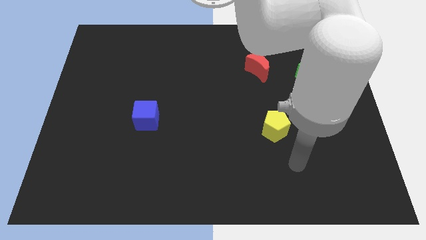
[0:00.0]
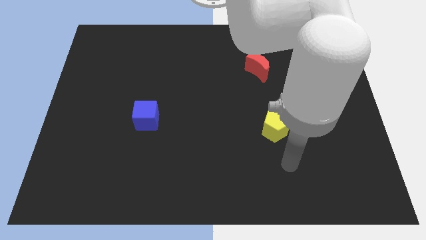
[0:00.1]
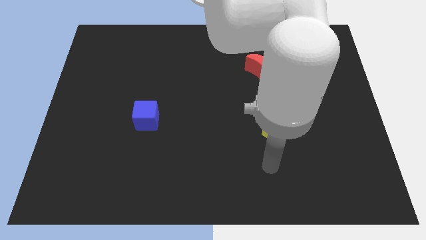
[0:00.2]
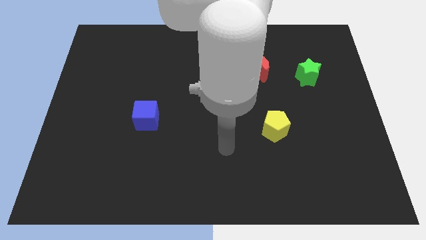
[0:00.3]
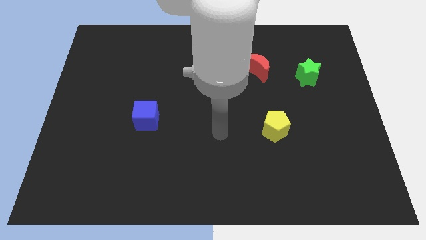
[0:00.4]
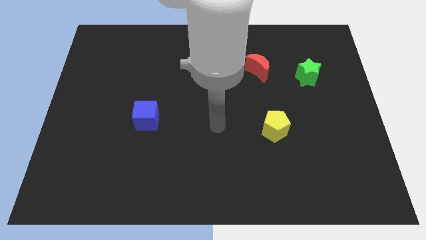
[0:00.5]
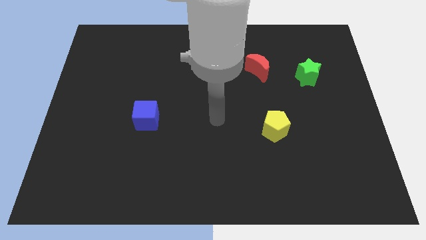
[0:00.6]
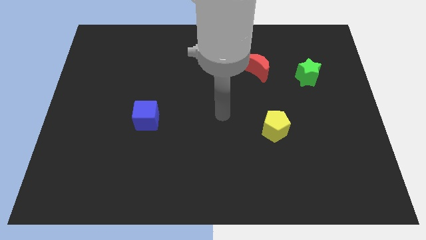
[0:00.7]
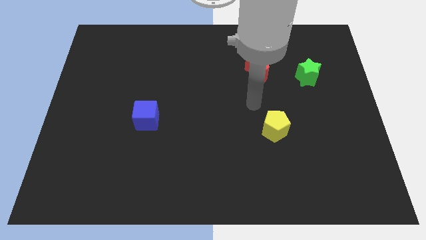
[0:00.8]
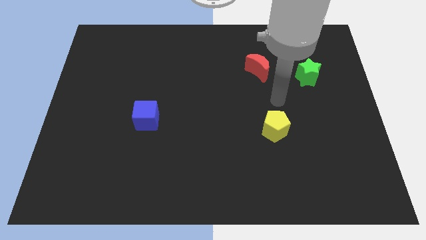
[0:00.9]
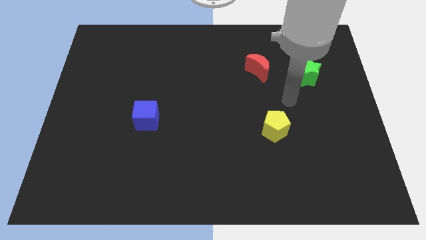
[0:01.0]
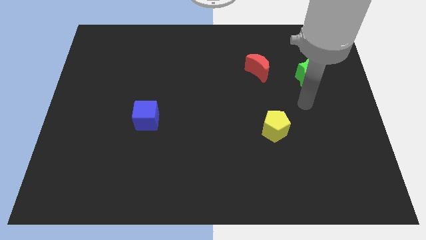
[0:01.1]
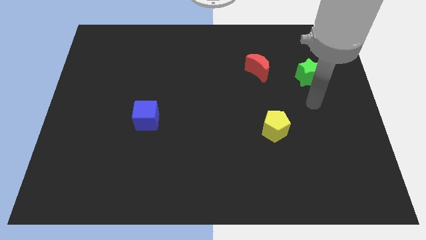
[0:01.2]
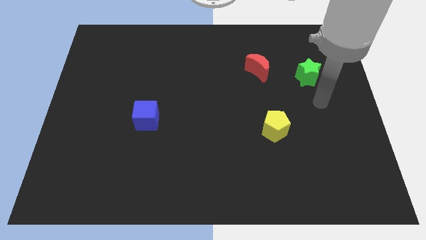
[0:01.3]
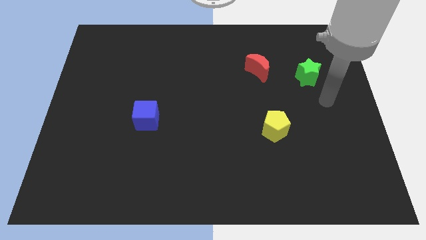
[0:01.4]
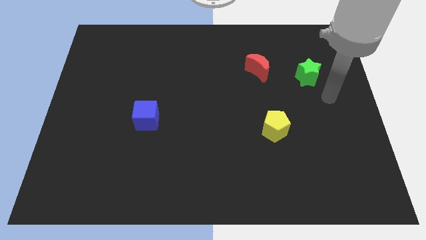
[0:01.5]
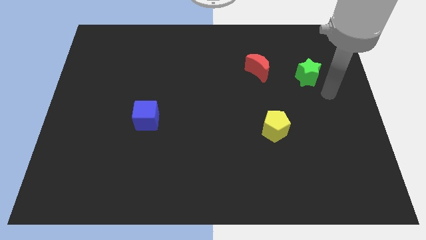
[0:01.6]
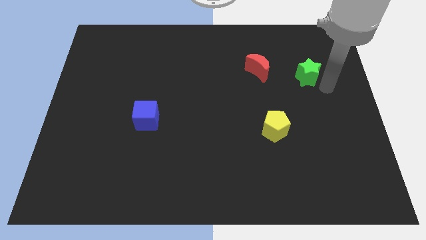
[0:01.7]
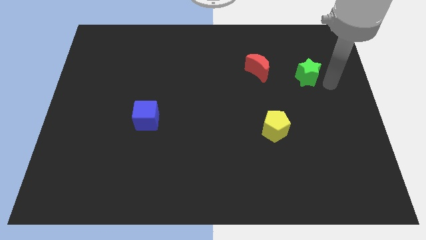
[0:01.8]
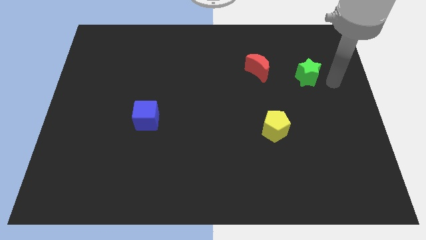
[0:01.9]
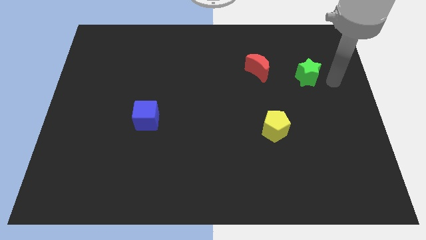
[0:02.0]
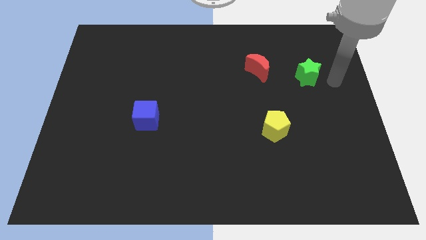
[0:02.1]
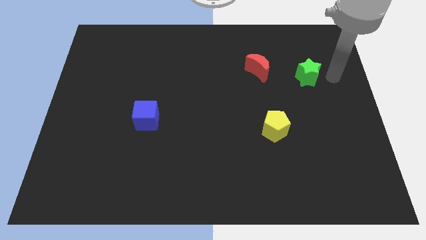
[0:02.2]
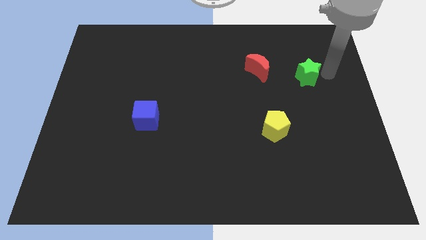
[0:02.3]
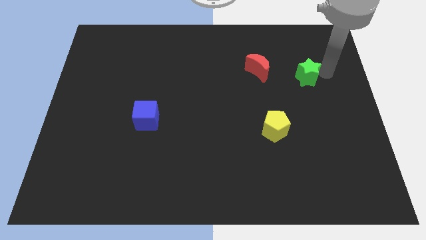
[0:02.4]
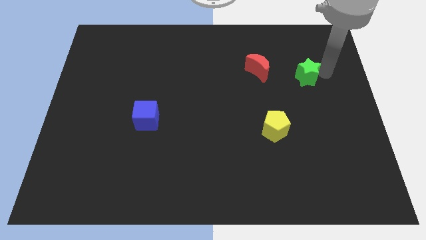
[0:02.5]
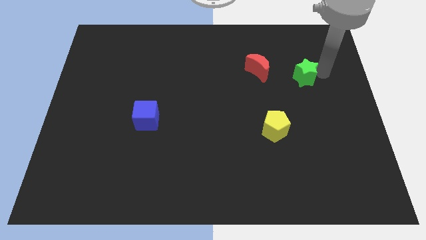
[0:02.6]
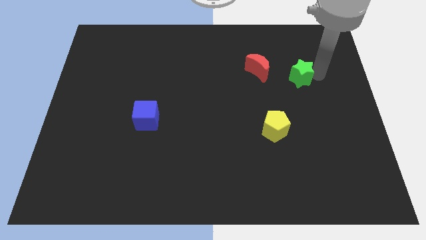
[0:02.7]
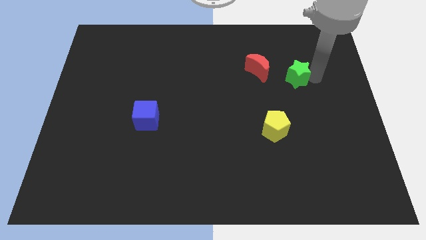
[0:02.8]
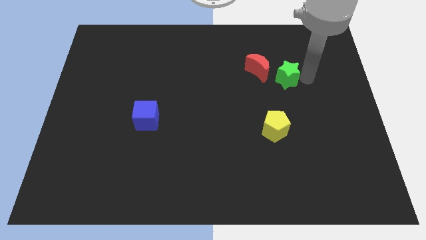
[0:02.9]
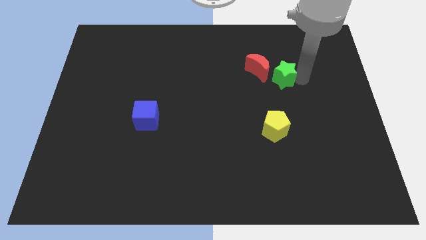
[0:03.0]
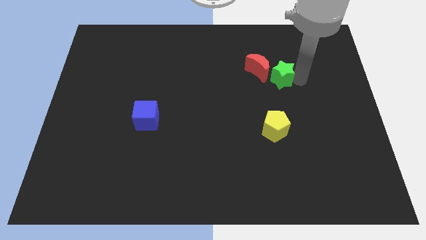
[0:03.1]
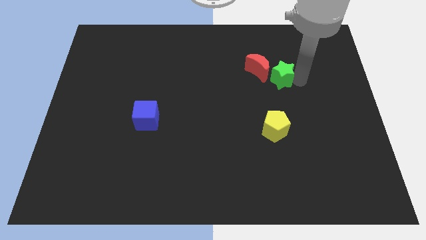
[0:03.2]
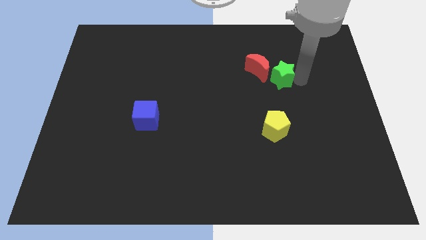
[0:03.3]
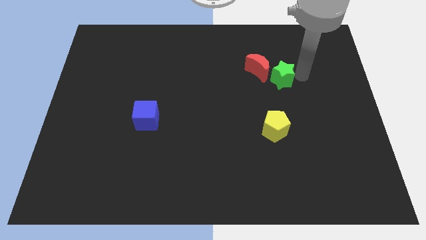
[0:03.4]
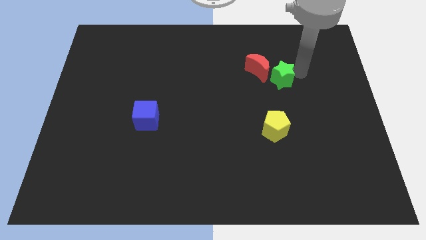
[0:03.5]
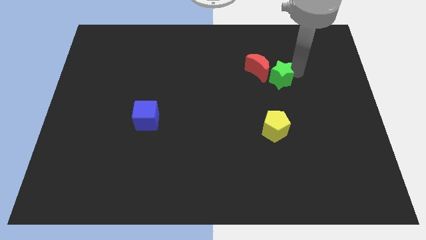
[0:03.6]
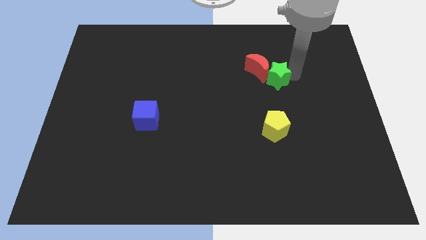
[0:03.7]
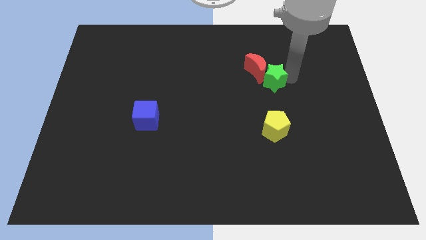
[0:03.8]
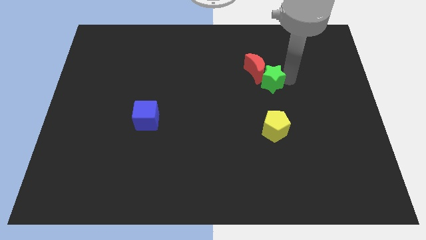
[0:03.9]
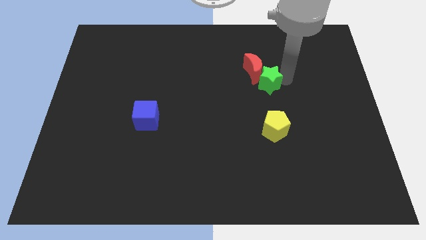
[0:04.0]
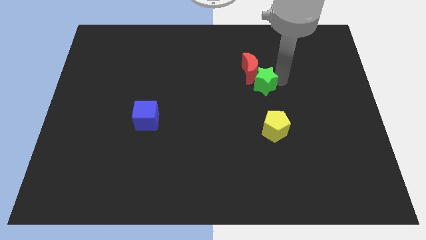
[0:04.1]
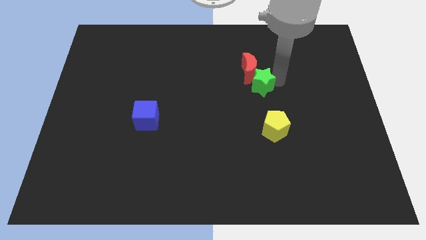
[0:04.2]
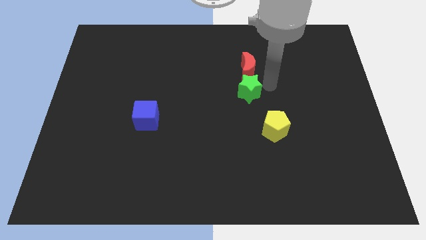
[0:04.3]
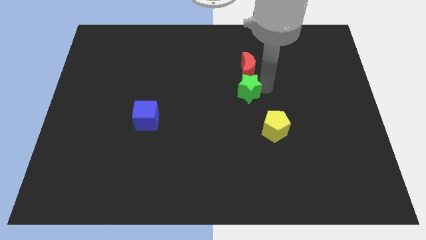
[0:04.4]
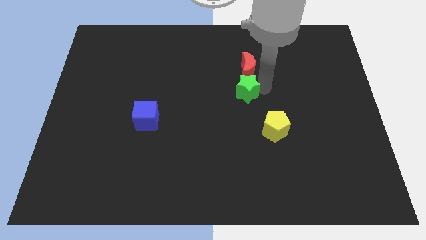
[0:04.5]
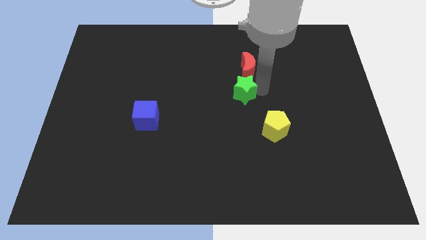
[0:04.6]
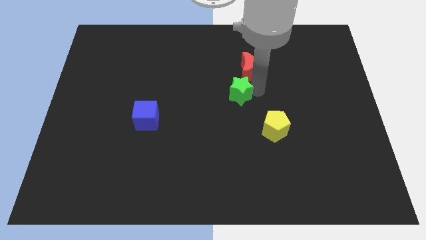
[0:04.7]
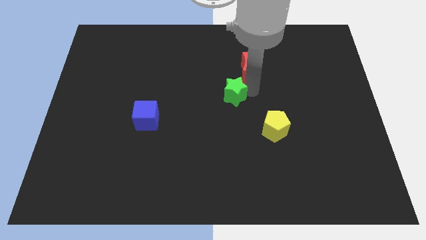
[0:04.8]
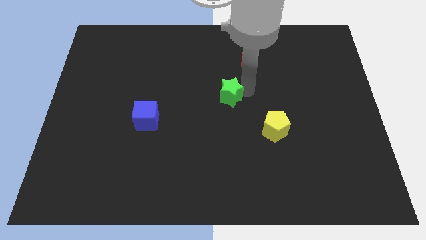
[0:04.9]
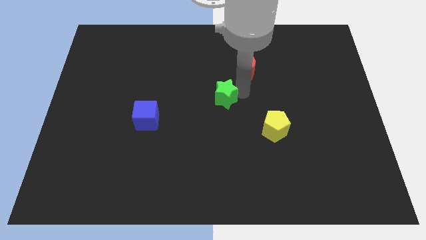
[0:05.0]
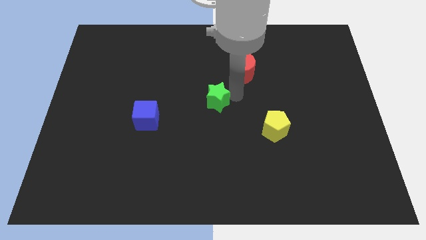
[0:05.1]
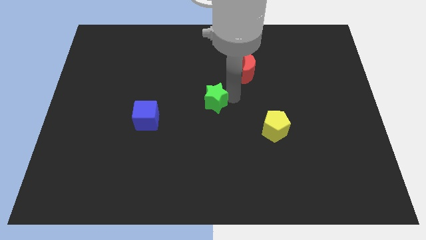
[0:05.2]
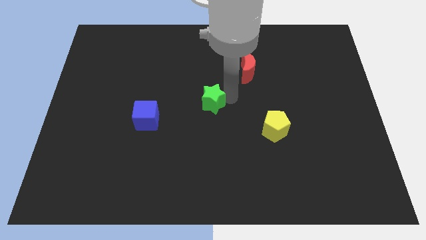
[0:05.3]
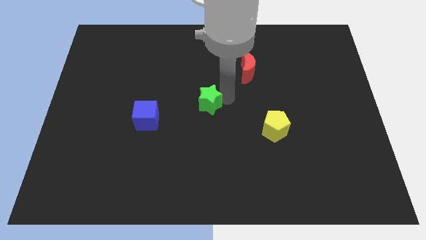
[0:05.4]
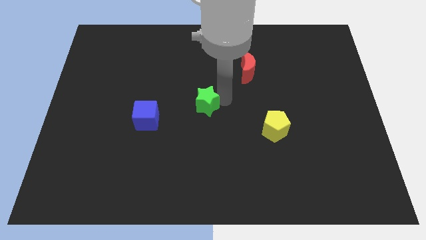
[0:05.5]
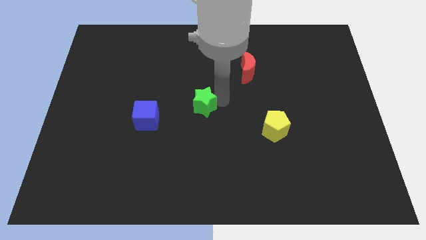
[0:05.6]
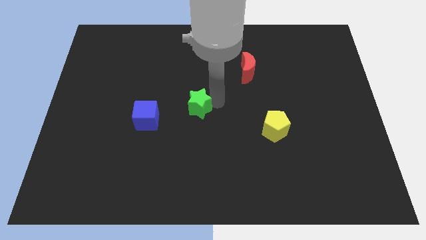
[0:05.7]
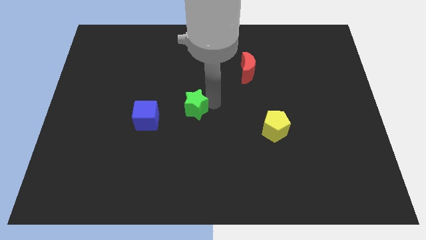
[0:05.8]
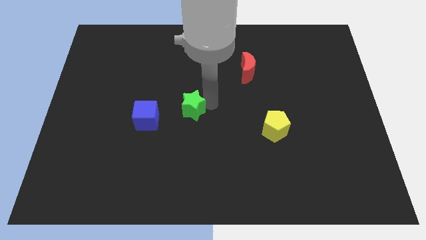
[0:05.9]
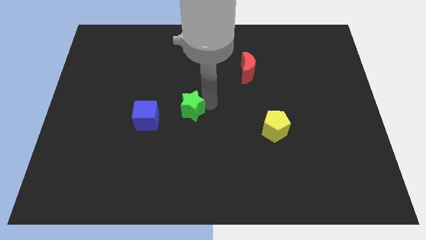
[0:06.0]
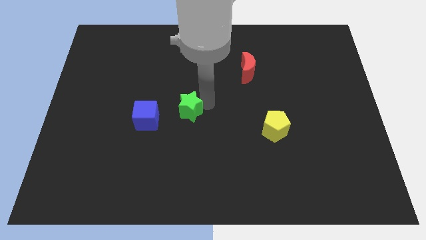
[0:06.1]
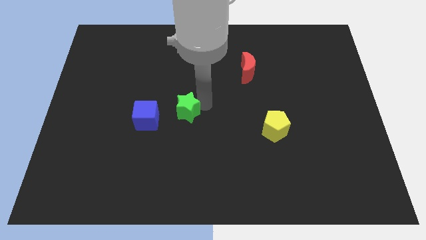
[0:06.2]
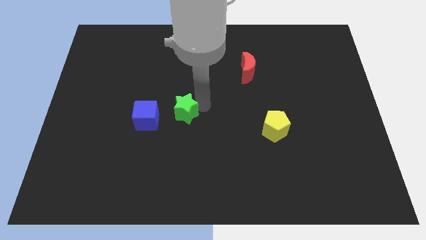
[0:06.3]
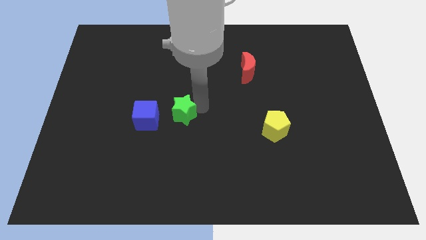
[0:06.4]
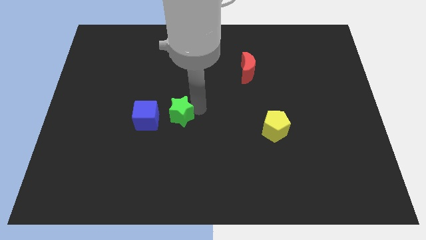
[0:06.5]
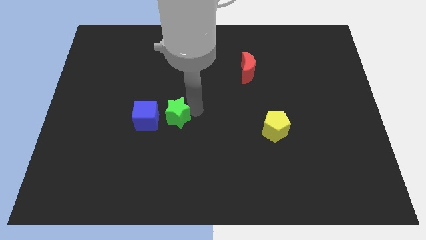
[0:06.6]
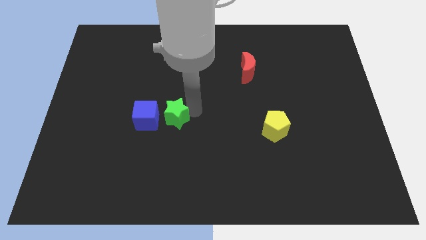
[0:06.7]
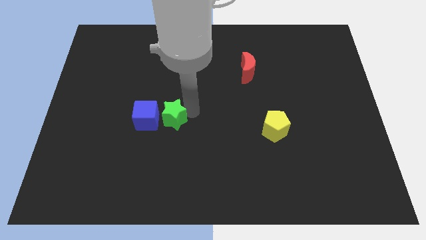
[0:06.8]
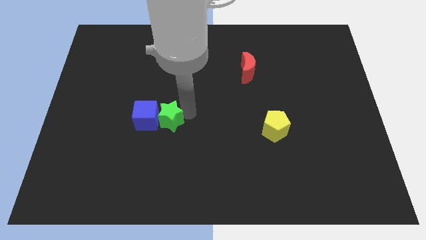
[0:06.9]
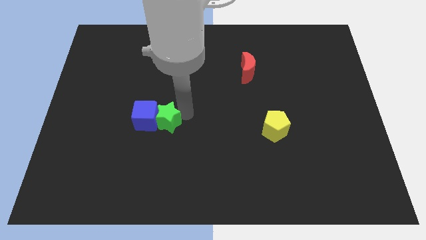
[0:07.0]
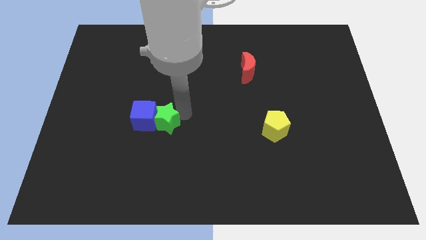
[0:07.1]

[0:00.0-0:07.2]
move the star next to the blue cube

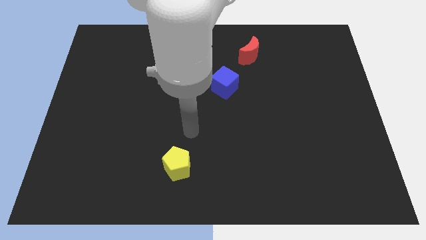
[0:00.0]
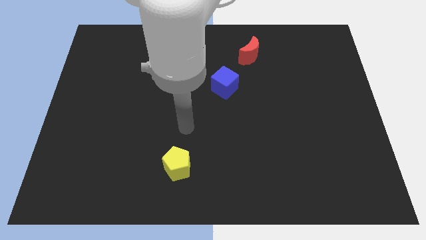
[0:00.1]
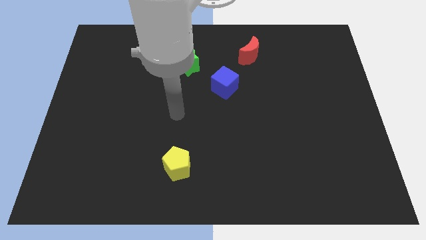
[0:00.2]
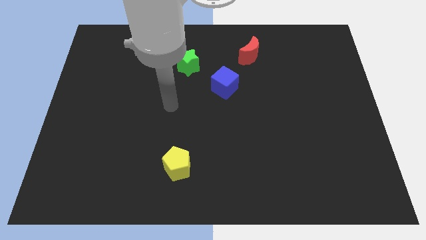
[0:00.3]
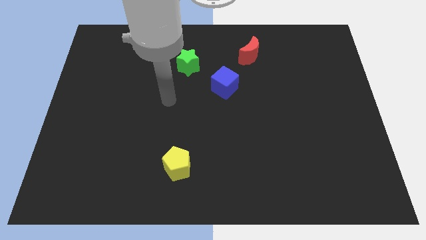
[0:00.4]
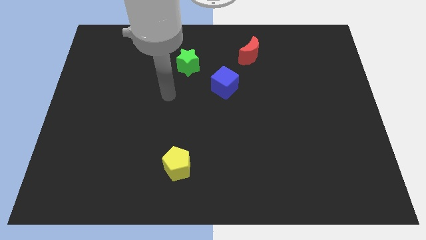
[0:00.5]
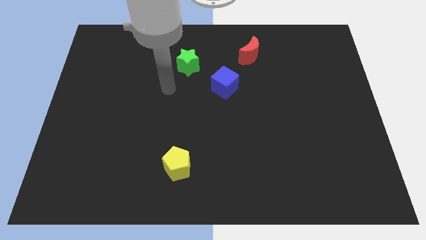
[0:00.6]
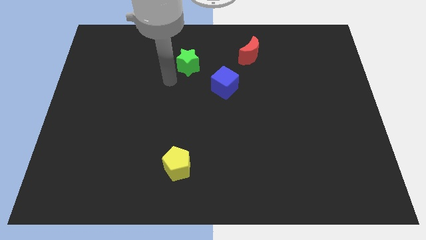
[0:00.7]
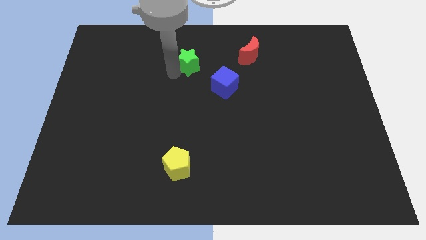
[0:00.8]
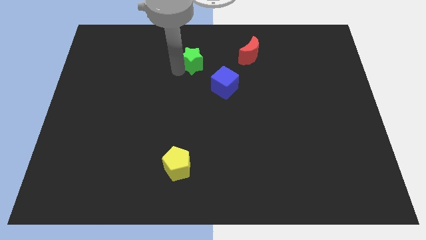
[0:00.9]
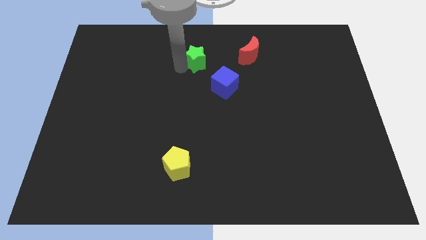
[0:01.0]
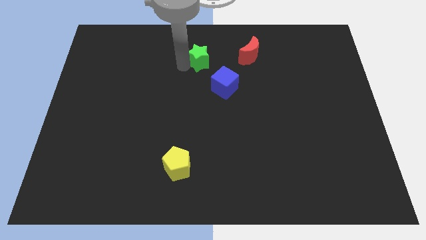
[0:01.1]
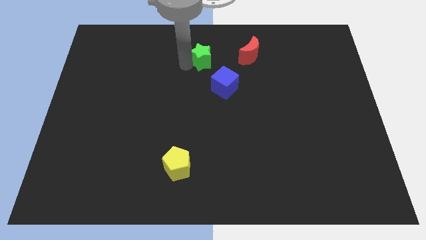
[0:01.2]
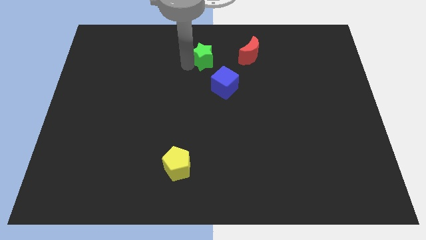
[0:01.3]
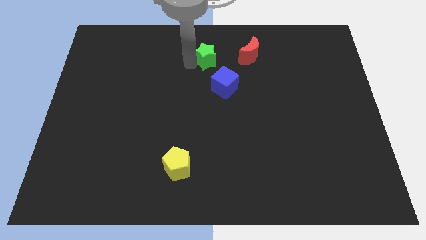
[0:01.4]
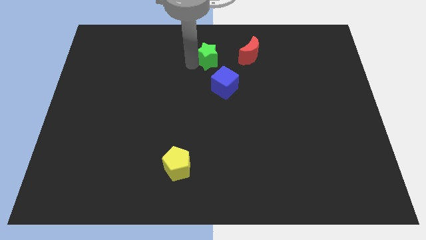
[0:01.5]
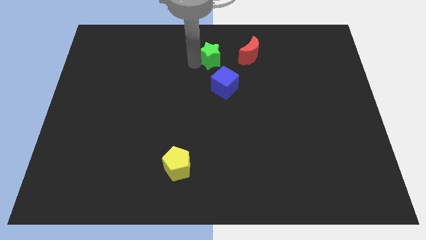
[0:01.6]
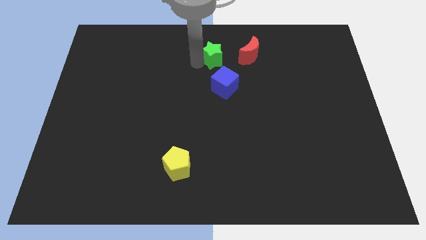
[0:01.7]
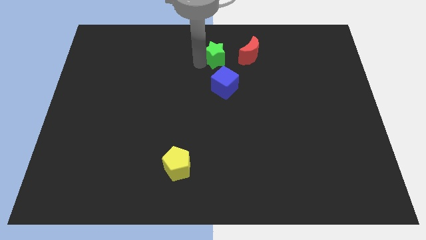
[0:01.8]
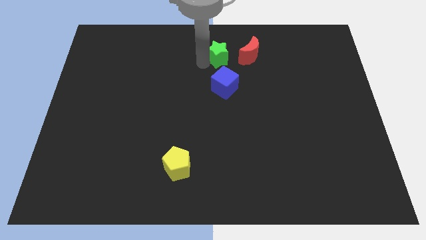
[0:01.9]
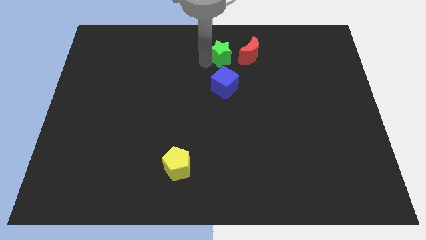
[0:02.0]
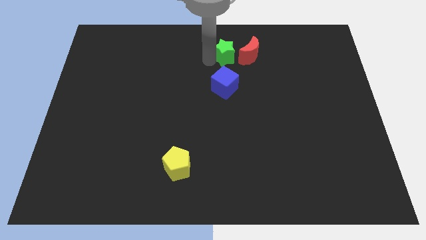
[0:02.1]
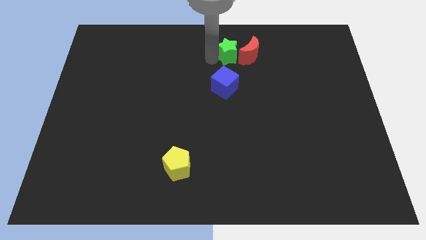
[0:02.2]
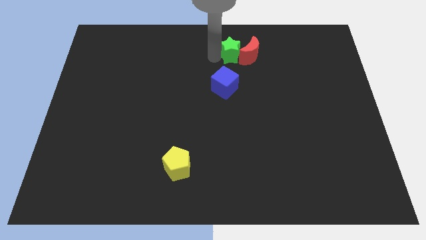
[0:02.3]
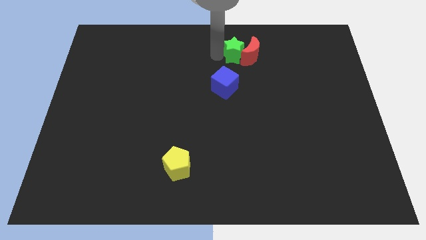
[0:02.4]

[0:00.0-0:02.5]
put the green star close to the red block
